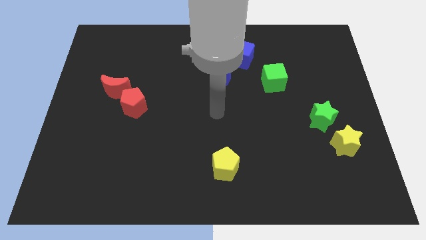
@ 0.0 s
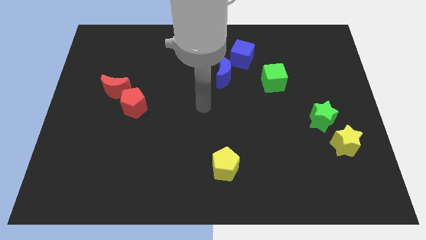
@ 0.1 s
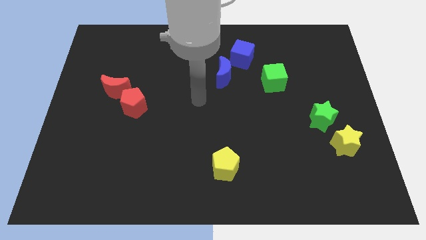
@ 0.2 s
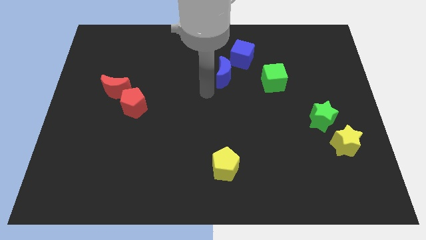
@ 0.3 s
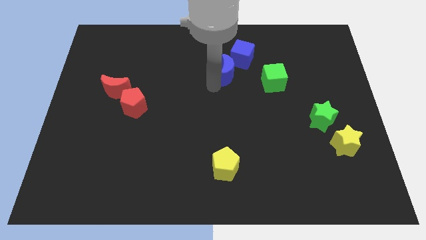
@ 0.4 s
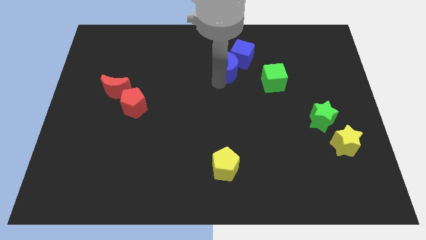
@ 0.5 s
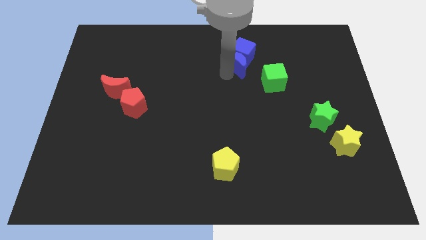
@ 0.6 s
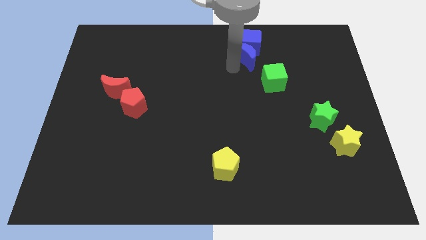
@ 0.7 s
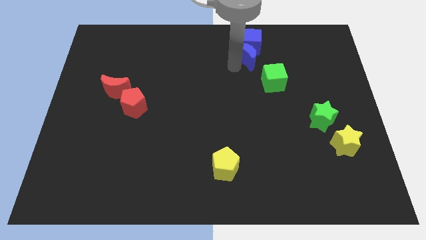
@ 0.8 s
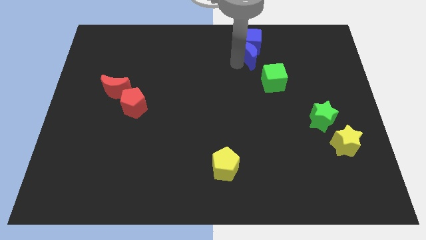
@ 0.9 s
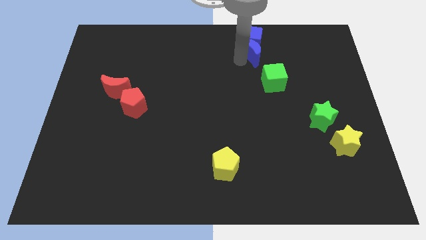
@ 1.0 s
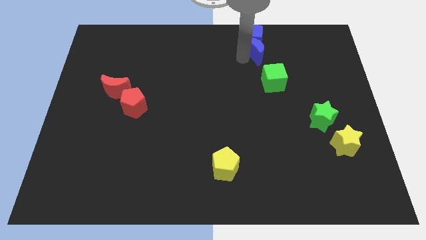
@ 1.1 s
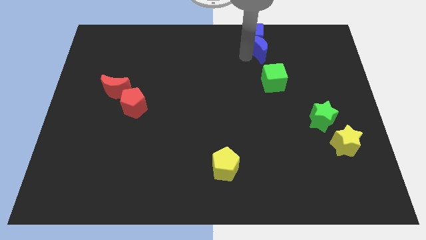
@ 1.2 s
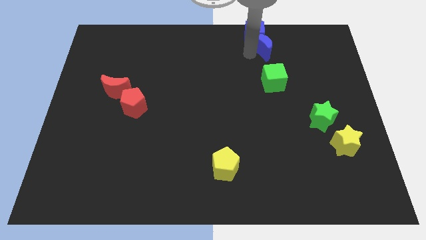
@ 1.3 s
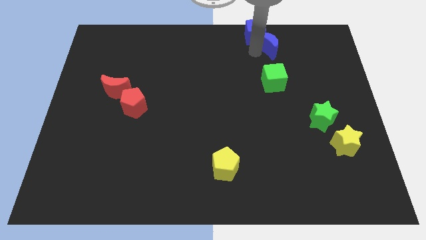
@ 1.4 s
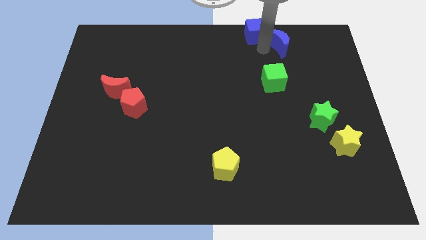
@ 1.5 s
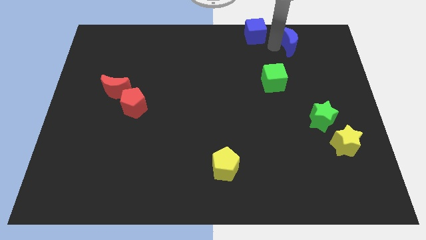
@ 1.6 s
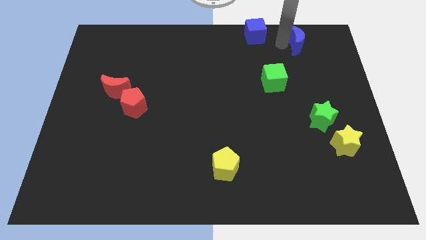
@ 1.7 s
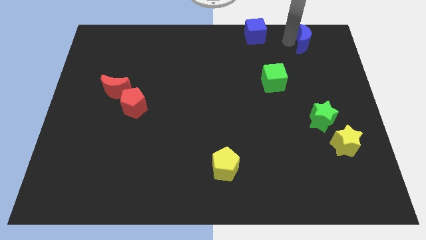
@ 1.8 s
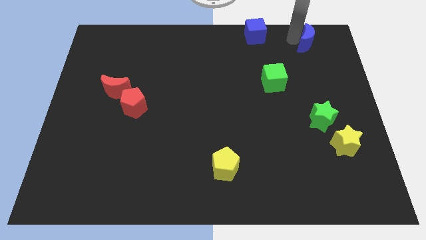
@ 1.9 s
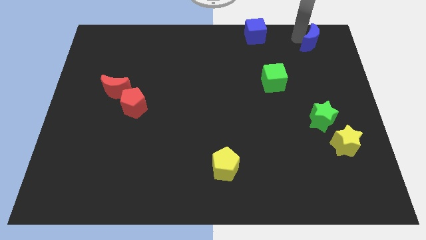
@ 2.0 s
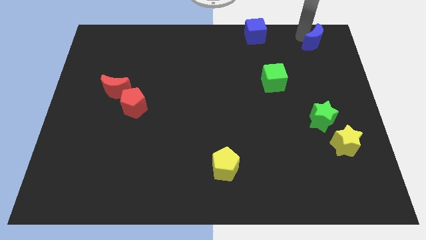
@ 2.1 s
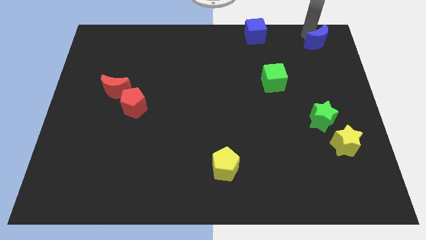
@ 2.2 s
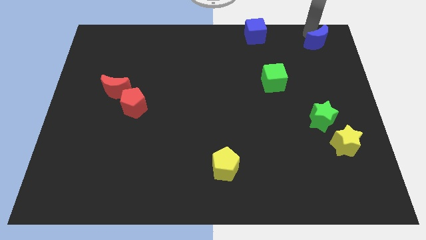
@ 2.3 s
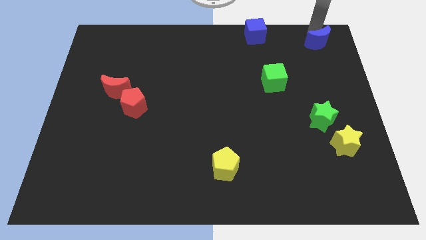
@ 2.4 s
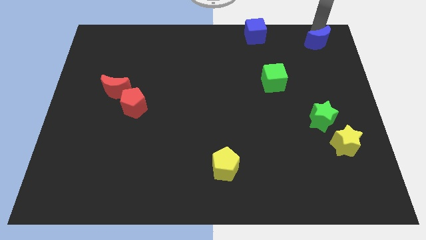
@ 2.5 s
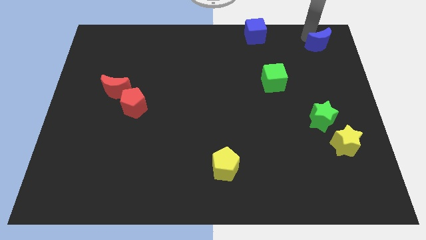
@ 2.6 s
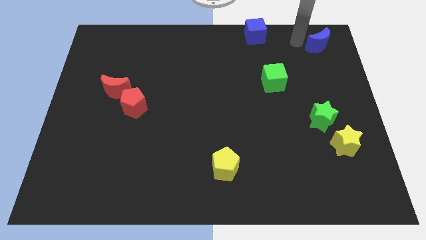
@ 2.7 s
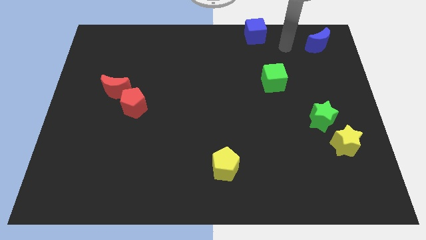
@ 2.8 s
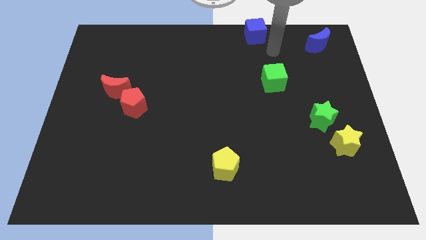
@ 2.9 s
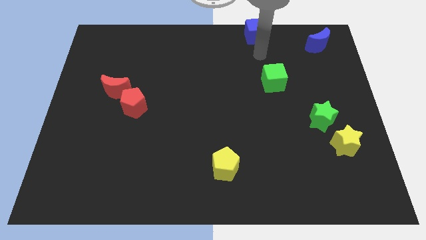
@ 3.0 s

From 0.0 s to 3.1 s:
separate blue moon from blue cube

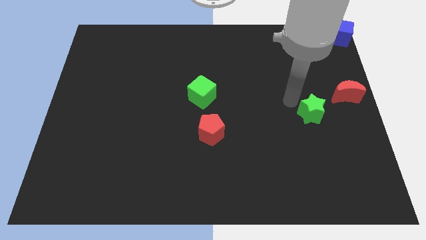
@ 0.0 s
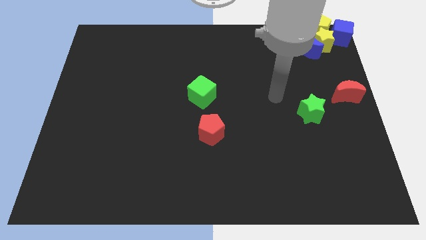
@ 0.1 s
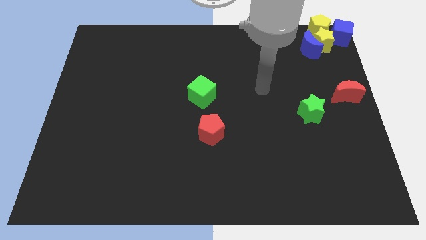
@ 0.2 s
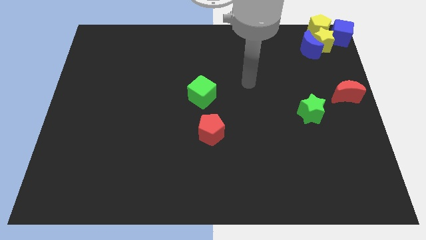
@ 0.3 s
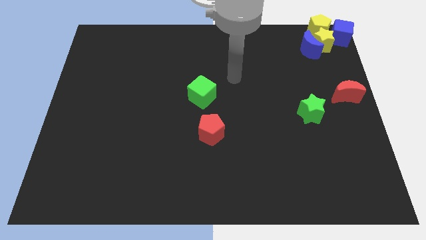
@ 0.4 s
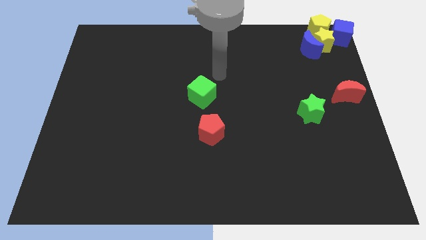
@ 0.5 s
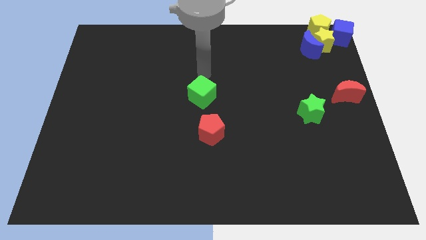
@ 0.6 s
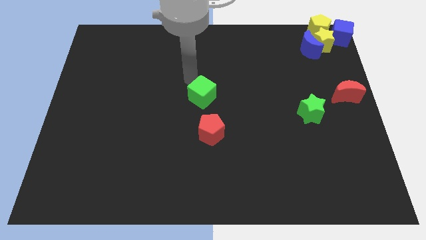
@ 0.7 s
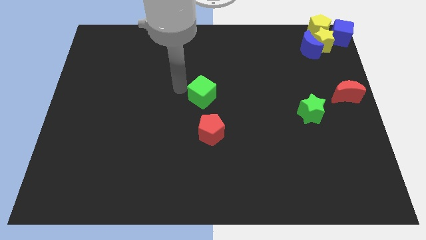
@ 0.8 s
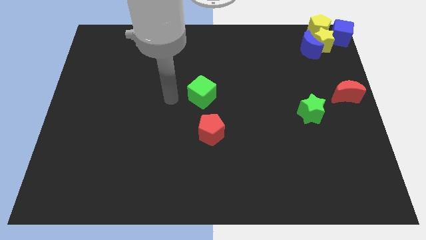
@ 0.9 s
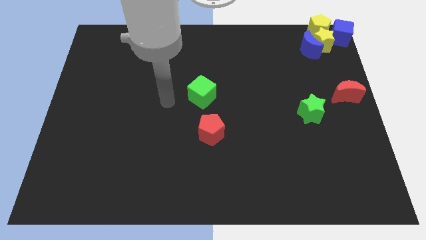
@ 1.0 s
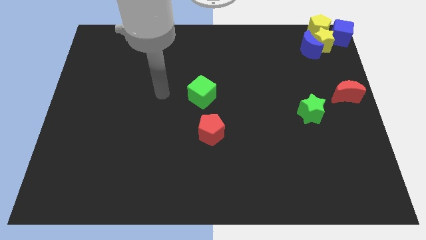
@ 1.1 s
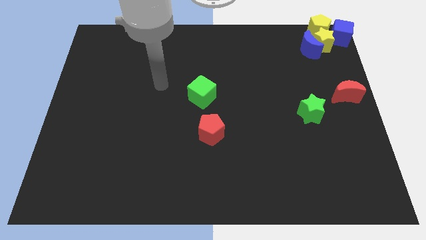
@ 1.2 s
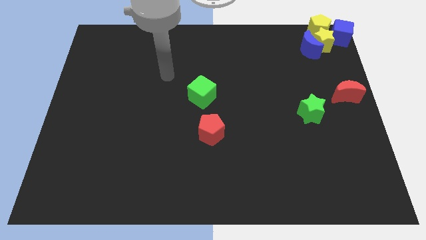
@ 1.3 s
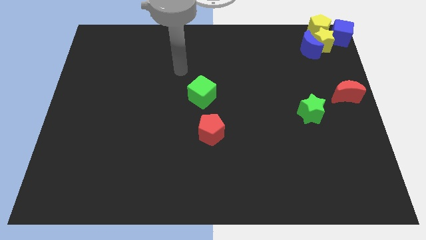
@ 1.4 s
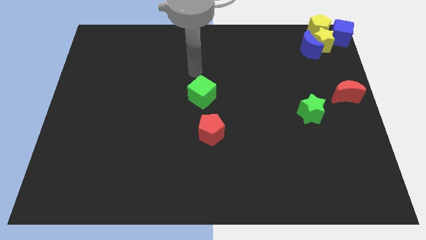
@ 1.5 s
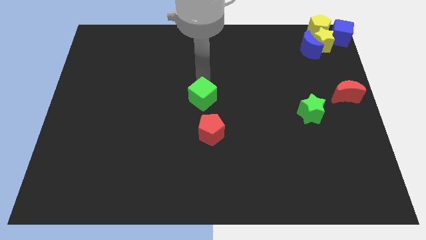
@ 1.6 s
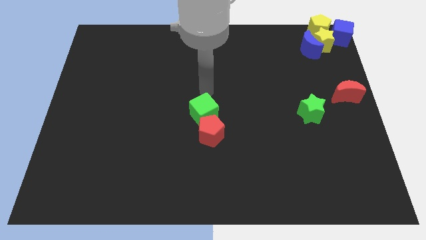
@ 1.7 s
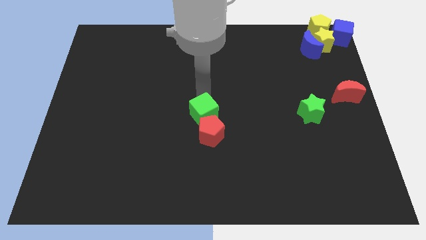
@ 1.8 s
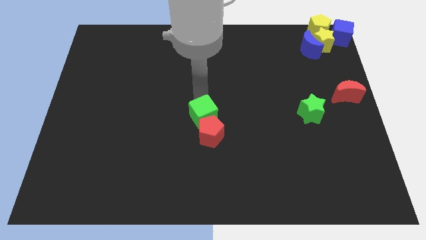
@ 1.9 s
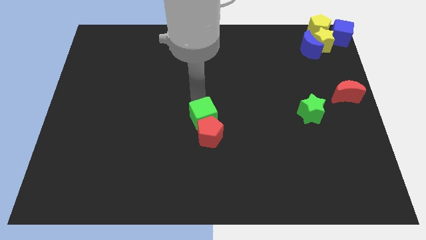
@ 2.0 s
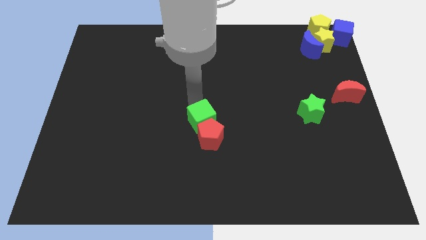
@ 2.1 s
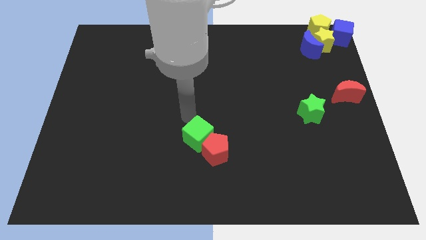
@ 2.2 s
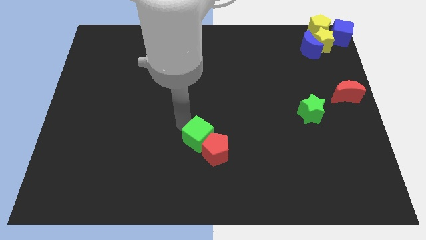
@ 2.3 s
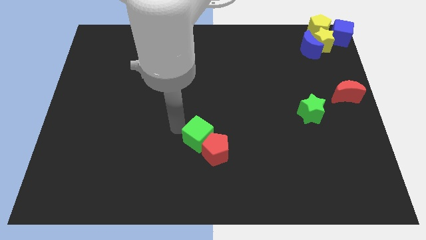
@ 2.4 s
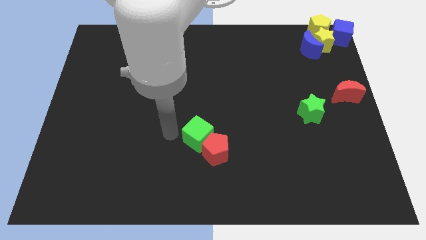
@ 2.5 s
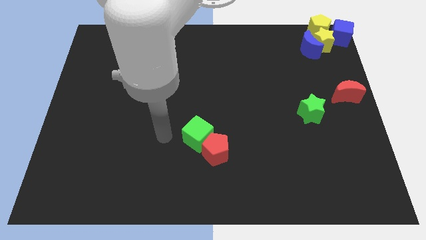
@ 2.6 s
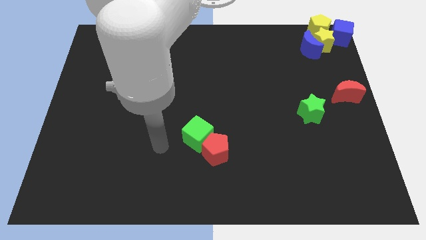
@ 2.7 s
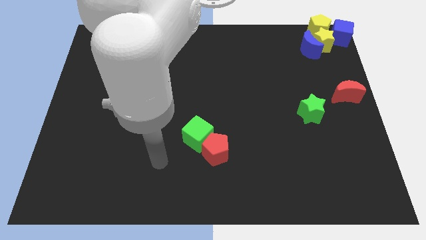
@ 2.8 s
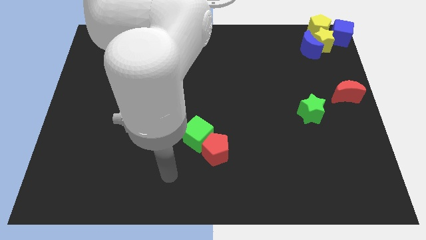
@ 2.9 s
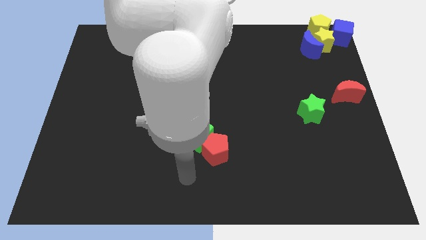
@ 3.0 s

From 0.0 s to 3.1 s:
push green cube close in to red pentagon

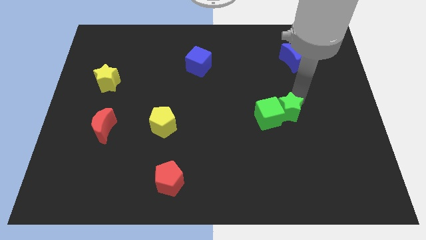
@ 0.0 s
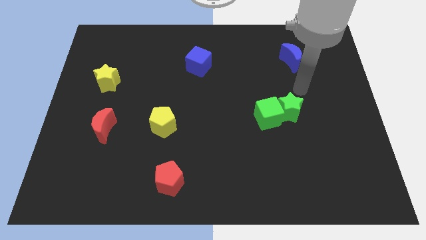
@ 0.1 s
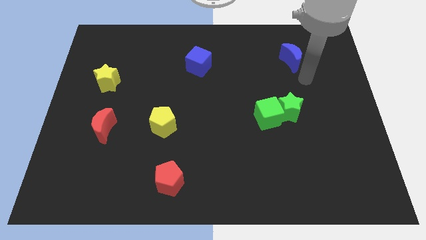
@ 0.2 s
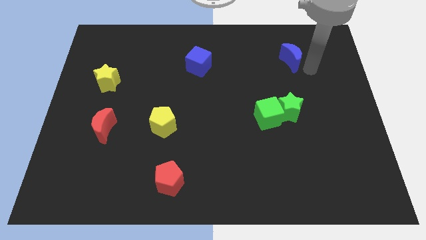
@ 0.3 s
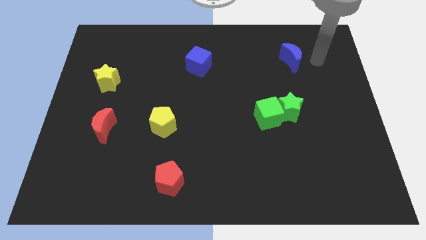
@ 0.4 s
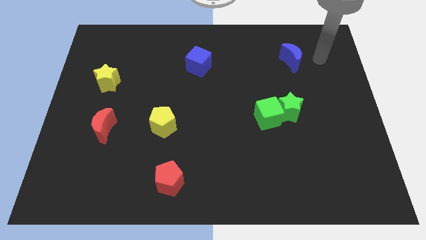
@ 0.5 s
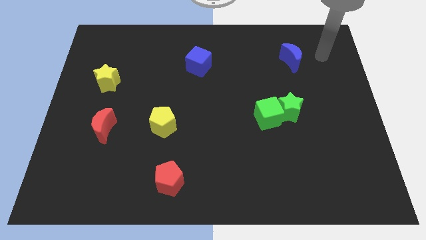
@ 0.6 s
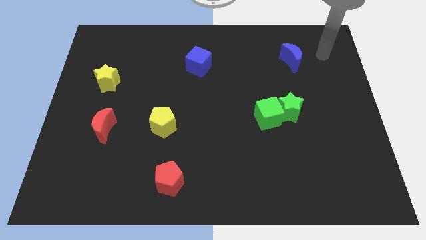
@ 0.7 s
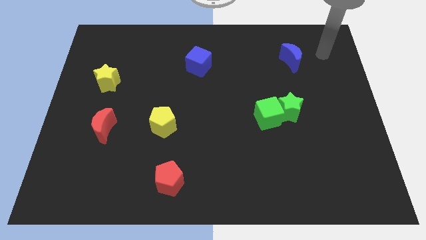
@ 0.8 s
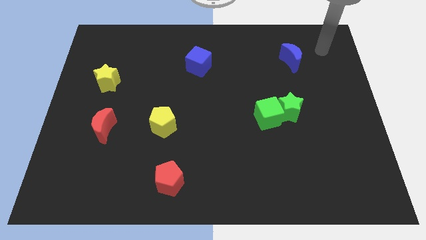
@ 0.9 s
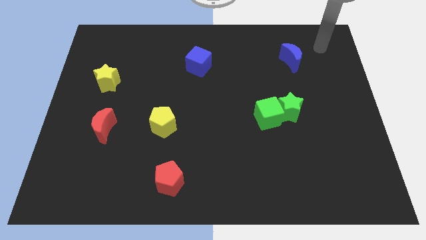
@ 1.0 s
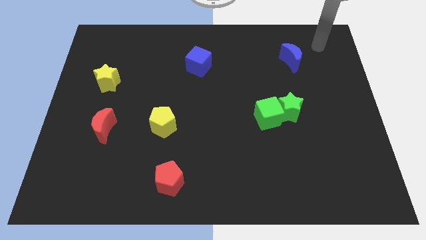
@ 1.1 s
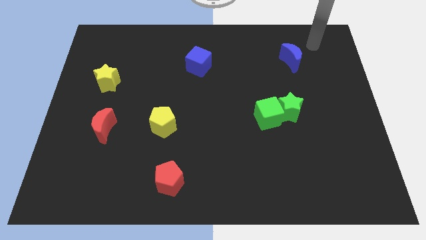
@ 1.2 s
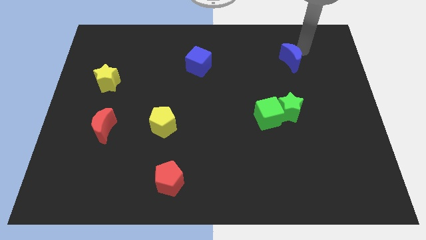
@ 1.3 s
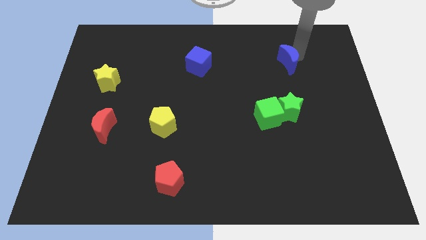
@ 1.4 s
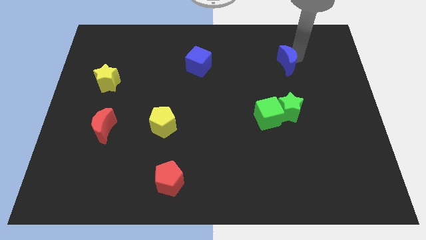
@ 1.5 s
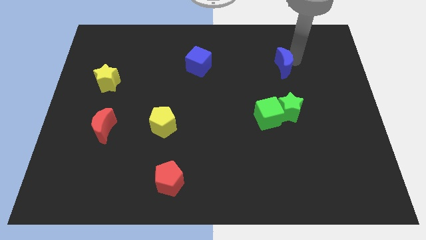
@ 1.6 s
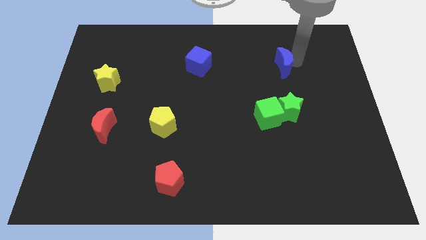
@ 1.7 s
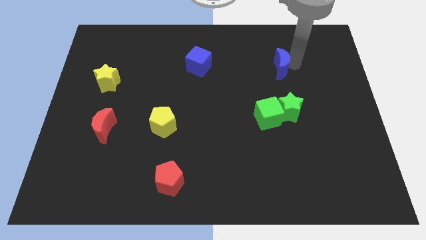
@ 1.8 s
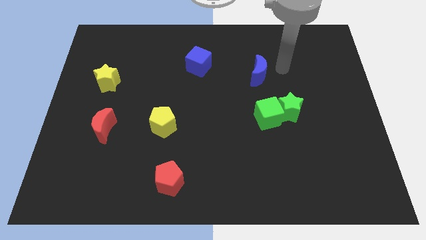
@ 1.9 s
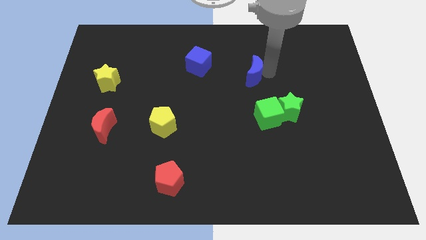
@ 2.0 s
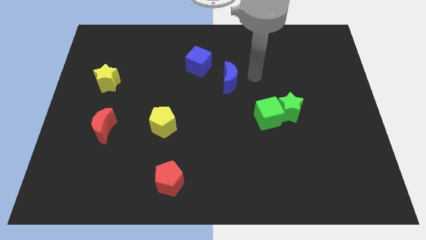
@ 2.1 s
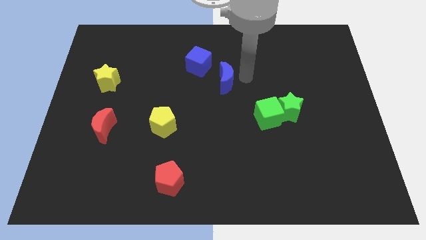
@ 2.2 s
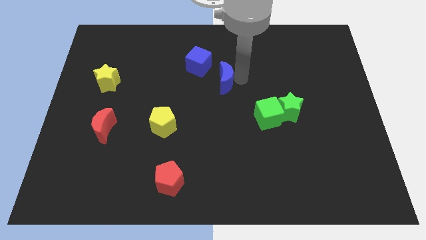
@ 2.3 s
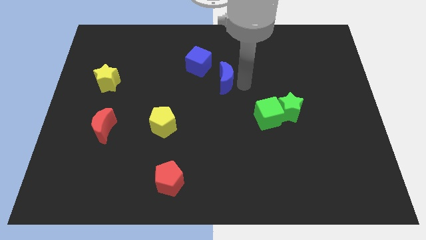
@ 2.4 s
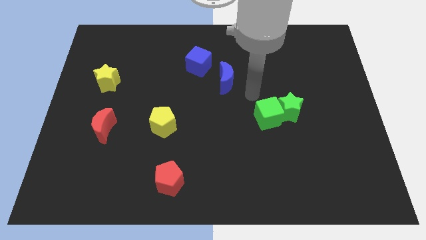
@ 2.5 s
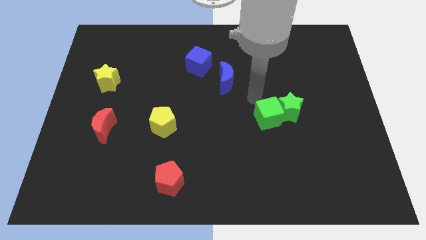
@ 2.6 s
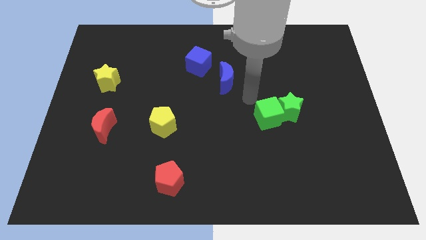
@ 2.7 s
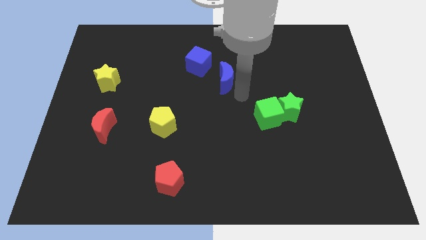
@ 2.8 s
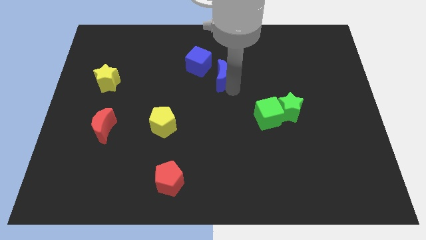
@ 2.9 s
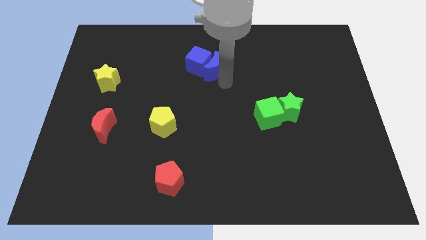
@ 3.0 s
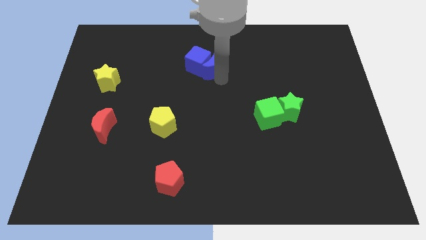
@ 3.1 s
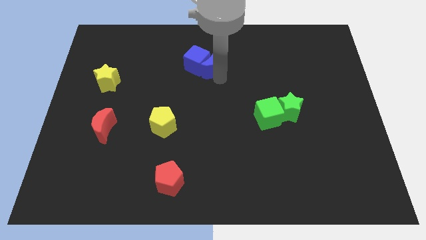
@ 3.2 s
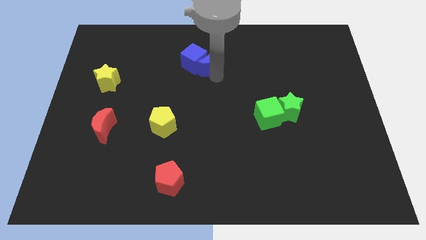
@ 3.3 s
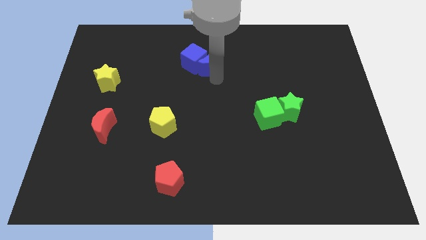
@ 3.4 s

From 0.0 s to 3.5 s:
push the blue moon into the blue cube
